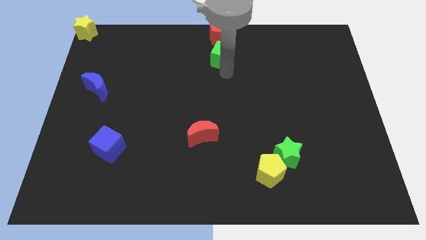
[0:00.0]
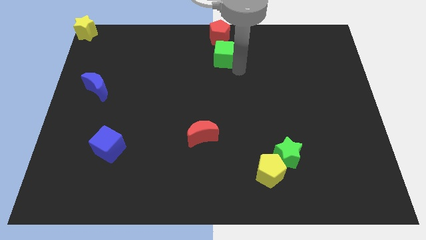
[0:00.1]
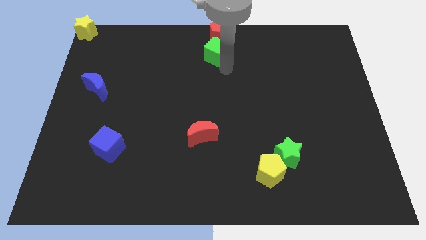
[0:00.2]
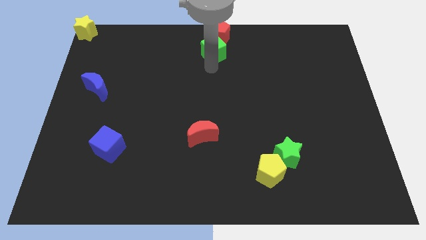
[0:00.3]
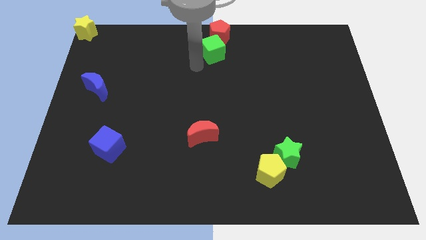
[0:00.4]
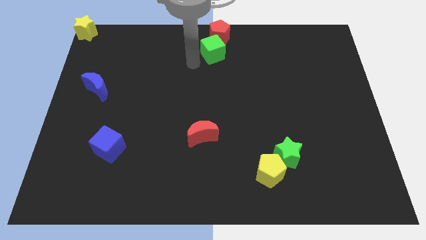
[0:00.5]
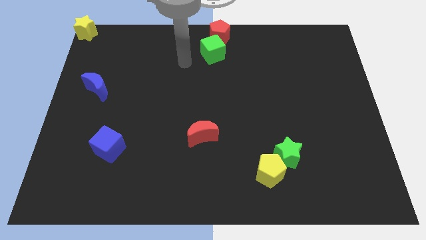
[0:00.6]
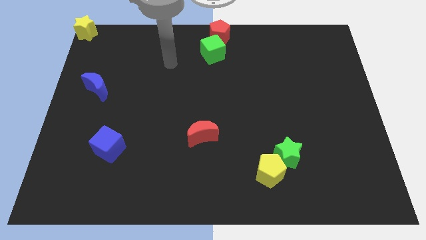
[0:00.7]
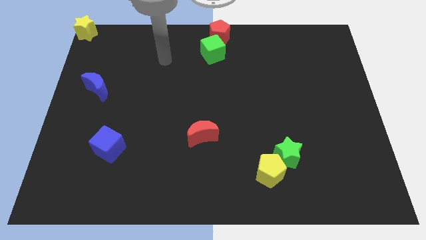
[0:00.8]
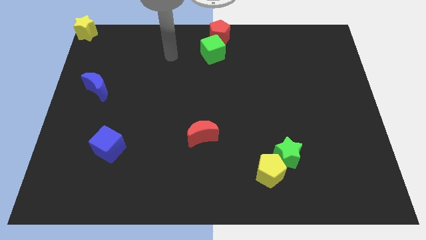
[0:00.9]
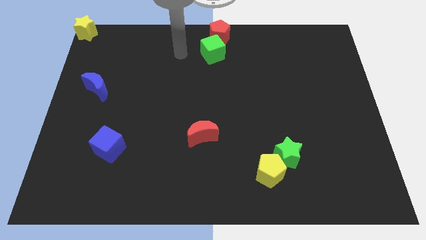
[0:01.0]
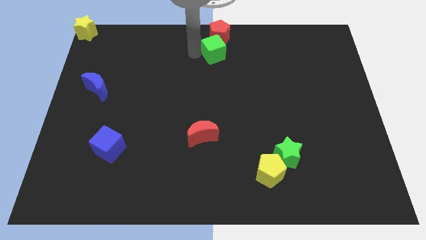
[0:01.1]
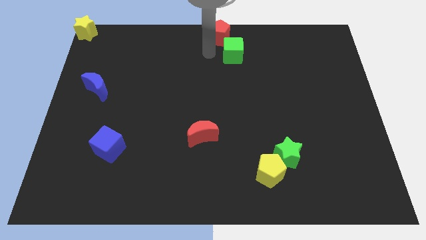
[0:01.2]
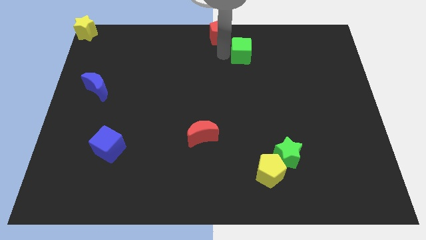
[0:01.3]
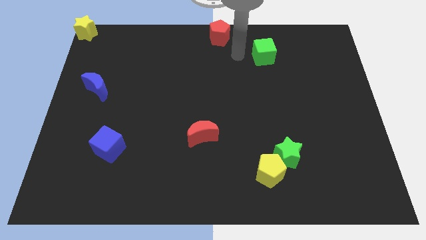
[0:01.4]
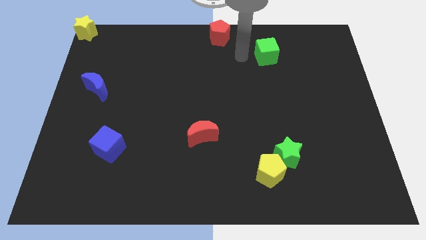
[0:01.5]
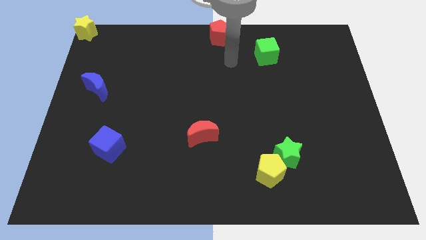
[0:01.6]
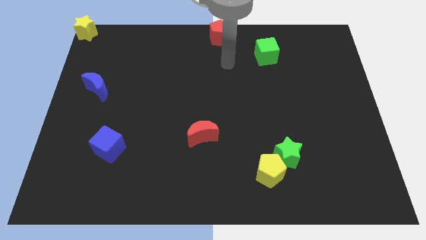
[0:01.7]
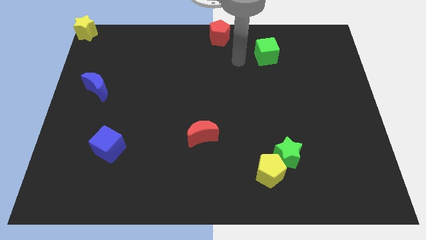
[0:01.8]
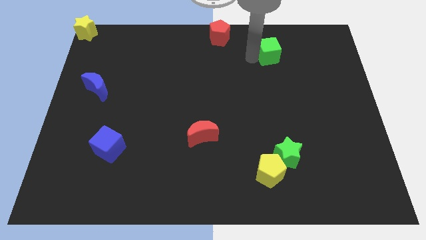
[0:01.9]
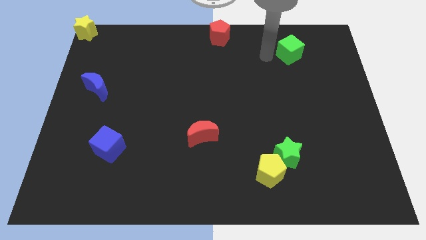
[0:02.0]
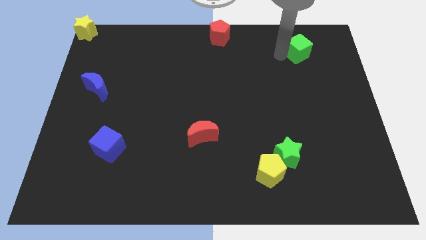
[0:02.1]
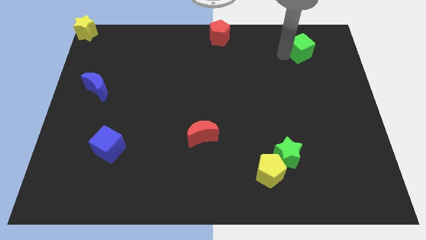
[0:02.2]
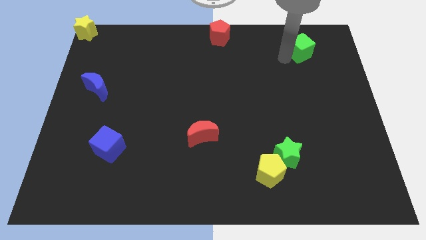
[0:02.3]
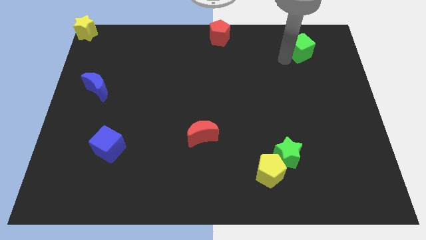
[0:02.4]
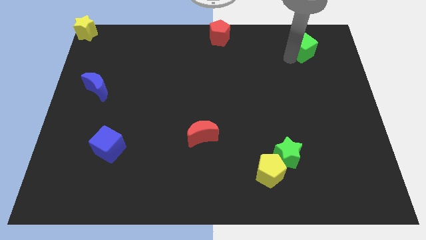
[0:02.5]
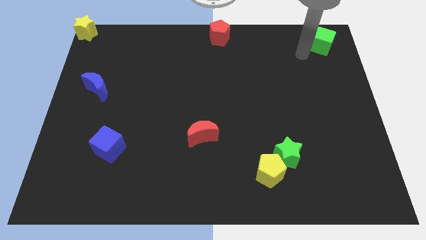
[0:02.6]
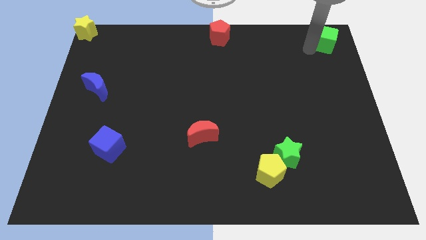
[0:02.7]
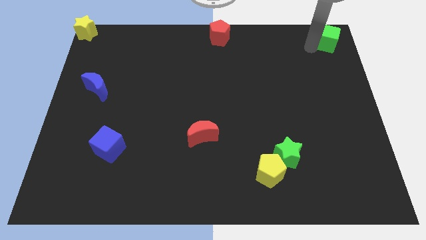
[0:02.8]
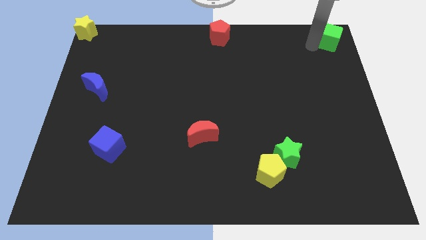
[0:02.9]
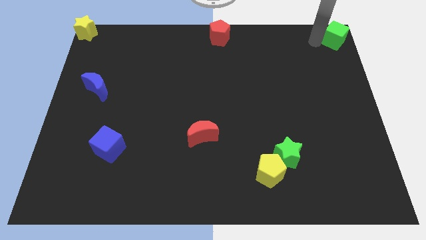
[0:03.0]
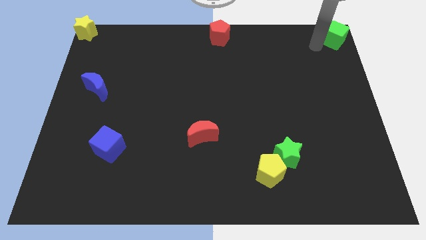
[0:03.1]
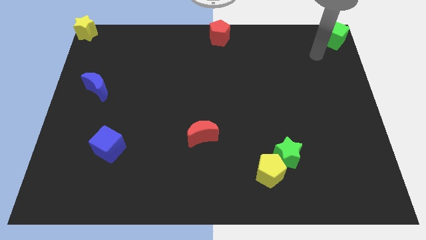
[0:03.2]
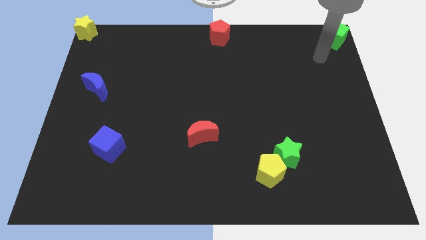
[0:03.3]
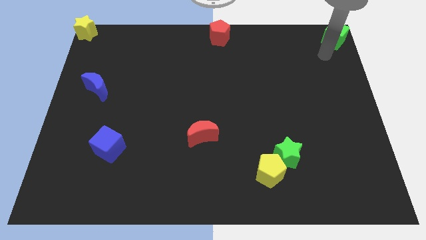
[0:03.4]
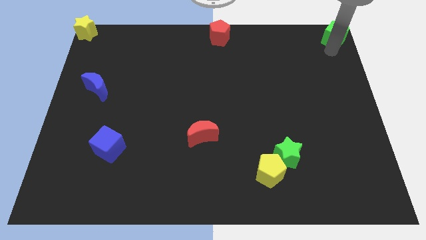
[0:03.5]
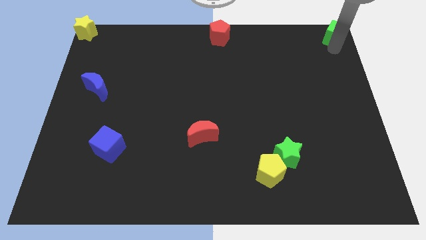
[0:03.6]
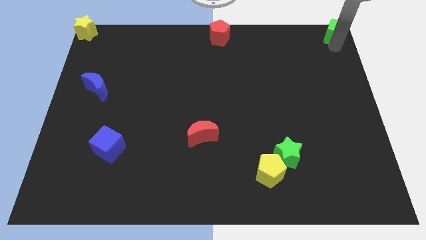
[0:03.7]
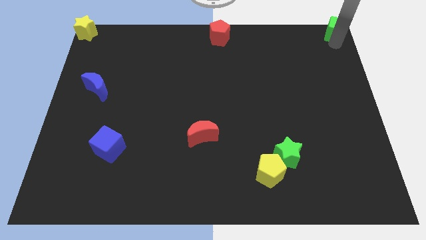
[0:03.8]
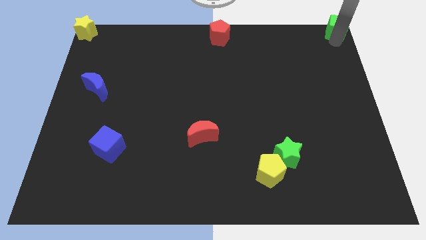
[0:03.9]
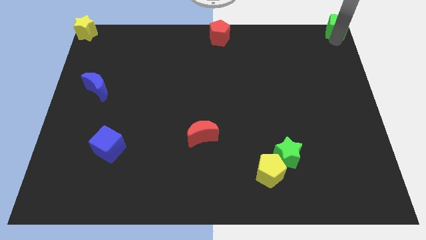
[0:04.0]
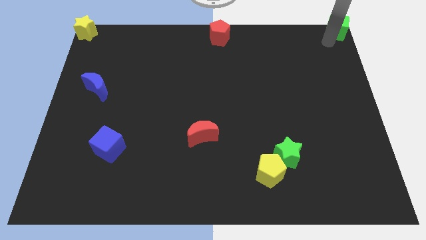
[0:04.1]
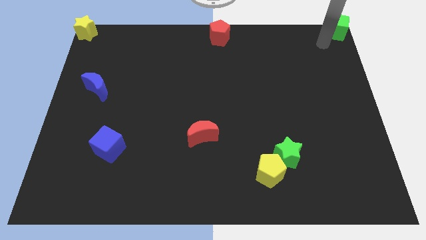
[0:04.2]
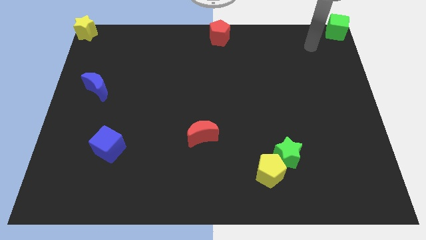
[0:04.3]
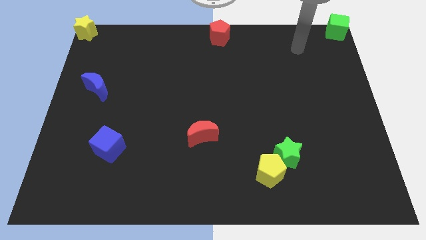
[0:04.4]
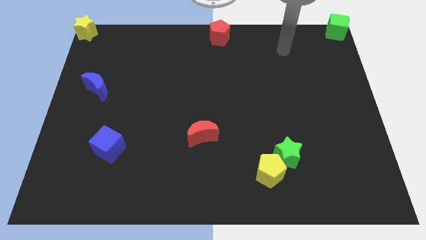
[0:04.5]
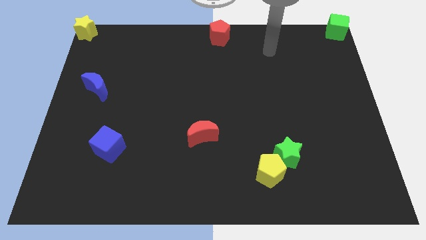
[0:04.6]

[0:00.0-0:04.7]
place the green cube to the top right corner of the board

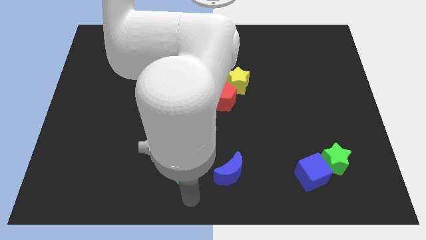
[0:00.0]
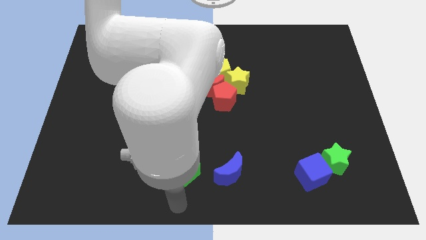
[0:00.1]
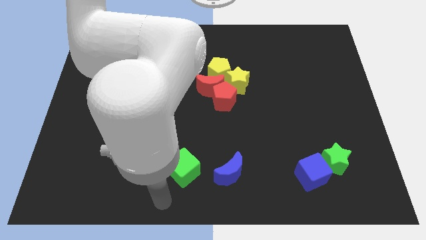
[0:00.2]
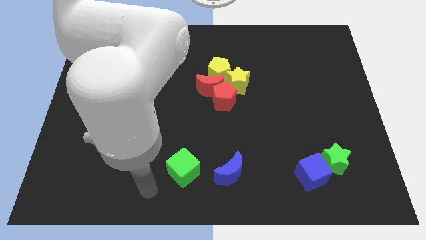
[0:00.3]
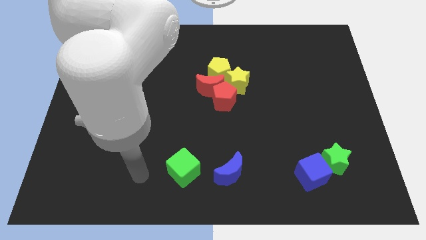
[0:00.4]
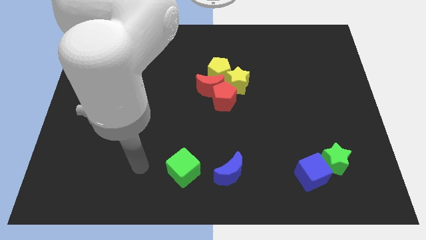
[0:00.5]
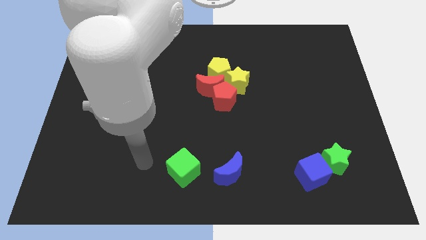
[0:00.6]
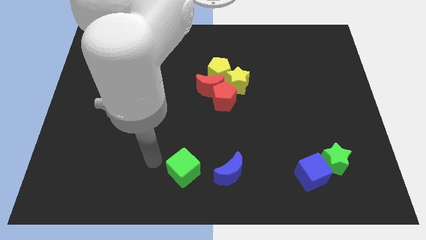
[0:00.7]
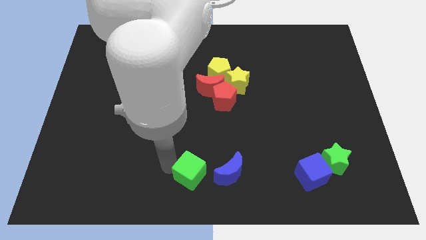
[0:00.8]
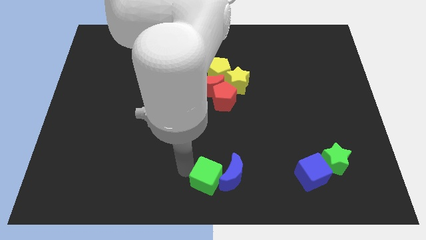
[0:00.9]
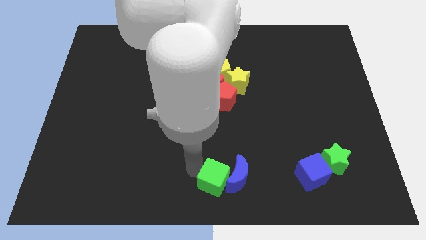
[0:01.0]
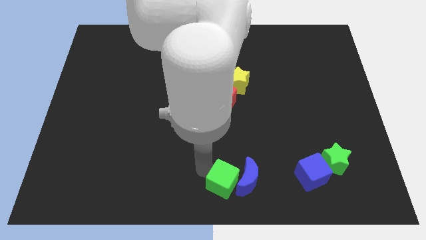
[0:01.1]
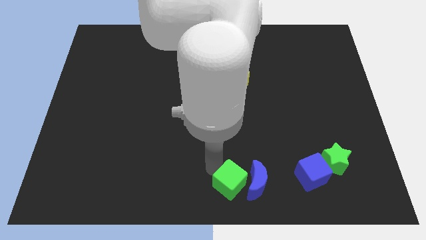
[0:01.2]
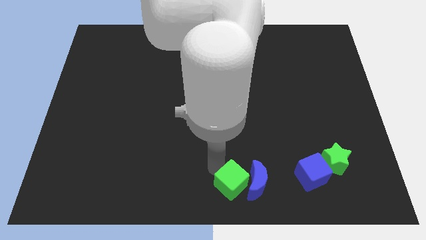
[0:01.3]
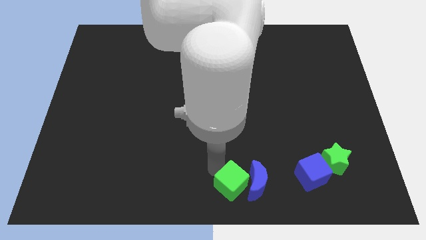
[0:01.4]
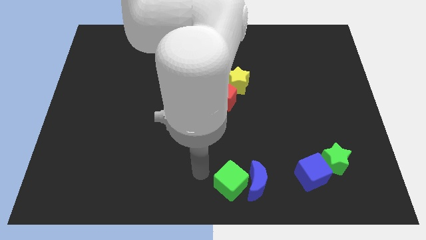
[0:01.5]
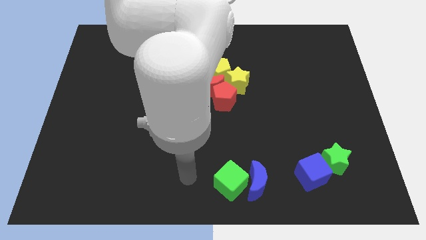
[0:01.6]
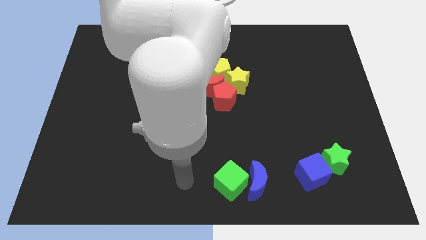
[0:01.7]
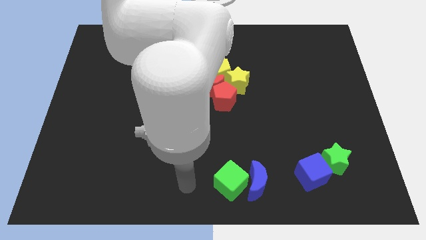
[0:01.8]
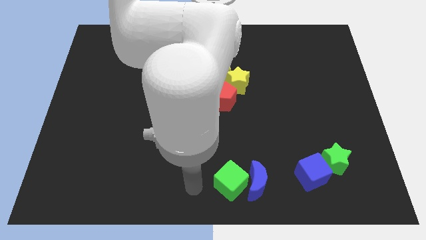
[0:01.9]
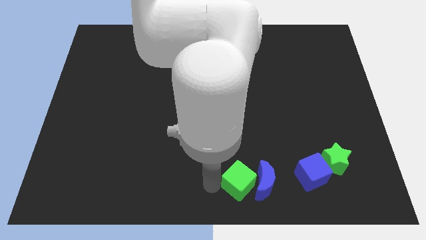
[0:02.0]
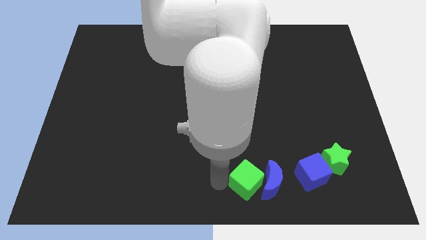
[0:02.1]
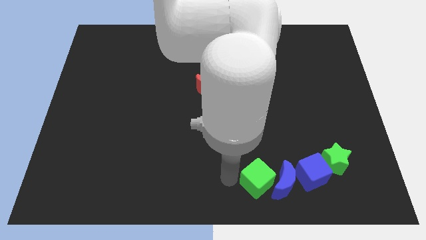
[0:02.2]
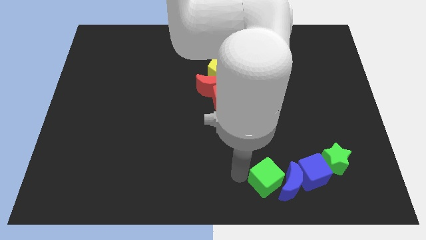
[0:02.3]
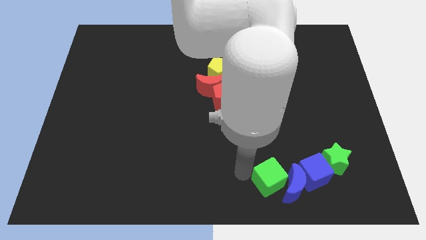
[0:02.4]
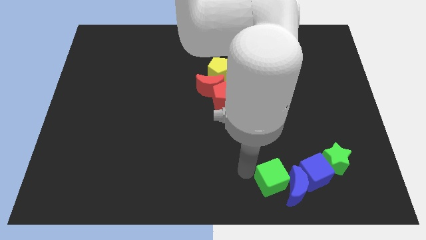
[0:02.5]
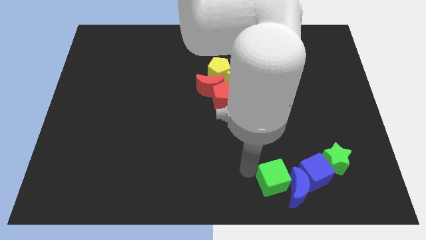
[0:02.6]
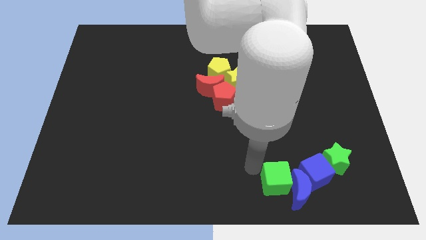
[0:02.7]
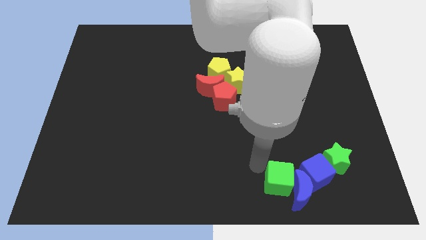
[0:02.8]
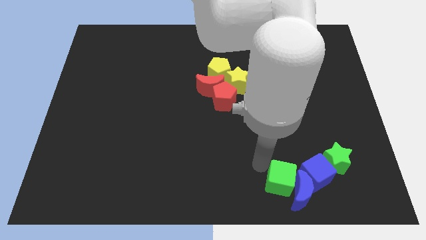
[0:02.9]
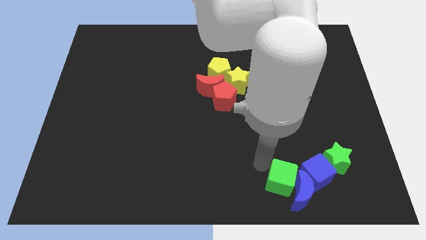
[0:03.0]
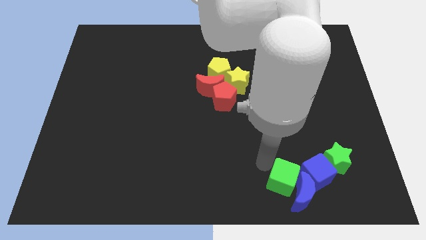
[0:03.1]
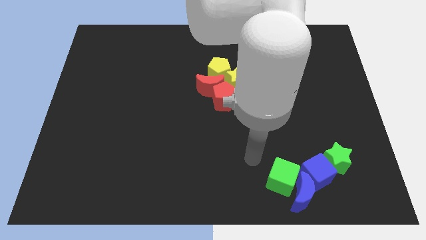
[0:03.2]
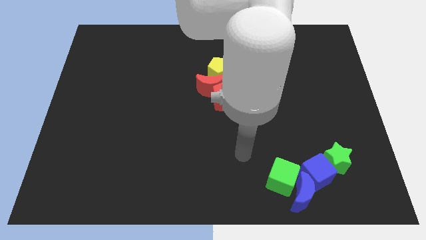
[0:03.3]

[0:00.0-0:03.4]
move the green cube with the blue moon

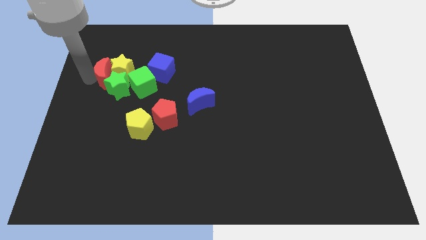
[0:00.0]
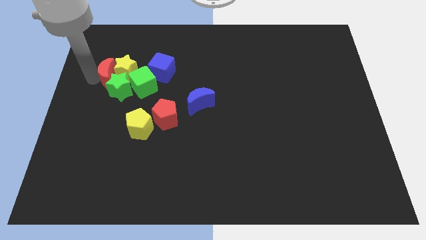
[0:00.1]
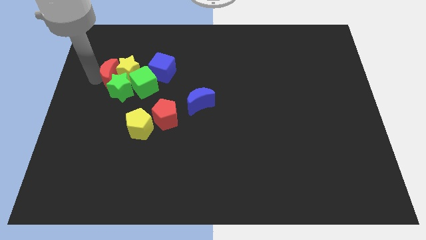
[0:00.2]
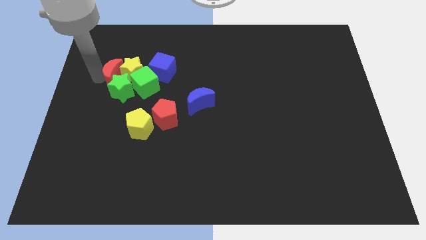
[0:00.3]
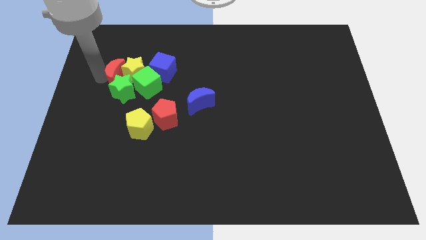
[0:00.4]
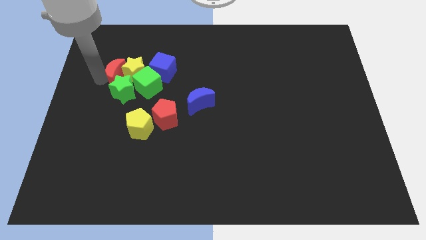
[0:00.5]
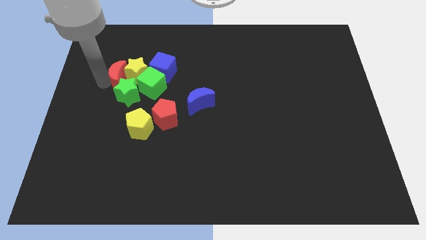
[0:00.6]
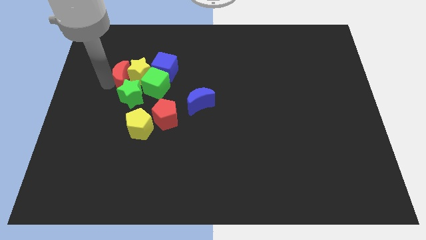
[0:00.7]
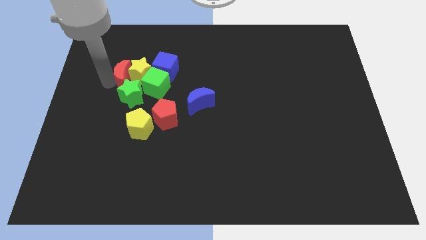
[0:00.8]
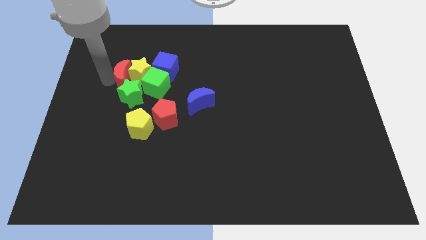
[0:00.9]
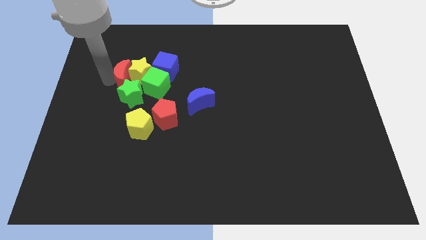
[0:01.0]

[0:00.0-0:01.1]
push the group of blocks towards the right side of the board
